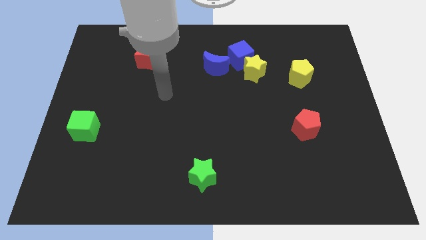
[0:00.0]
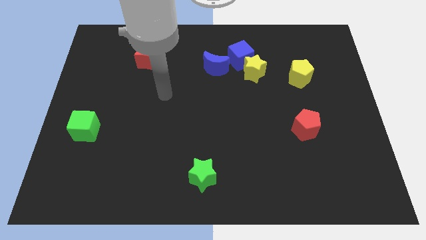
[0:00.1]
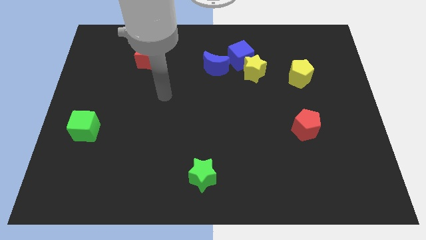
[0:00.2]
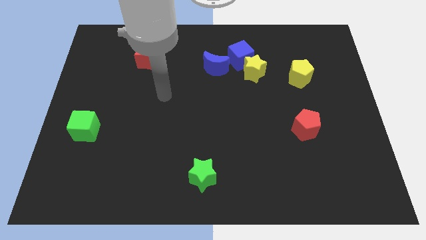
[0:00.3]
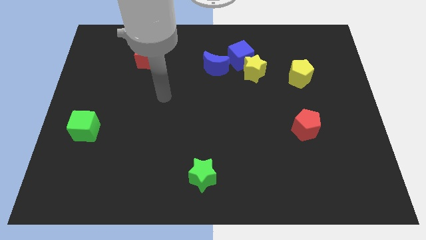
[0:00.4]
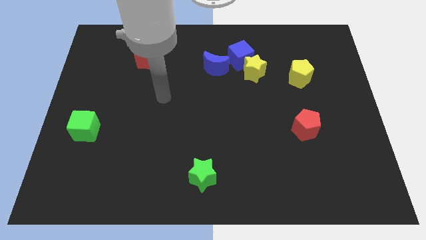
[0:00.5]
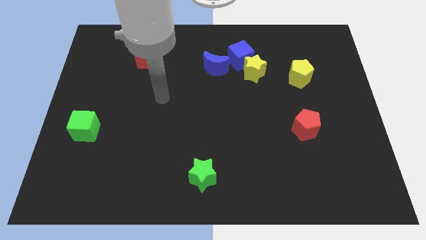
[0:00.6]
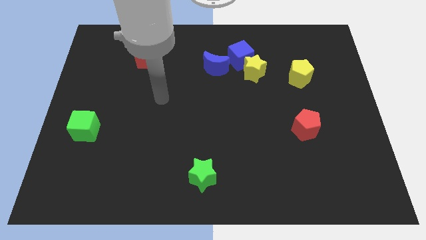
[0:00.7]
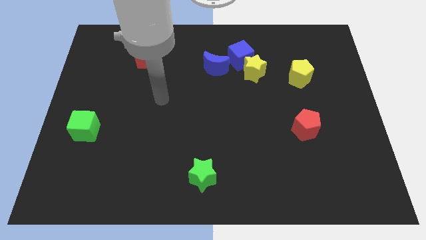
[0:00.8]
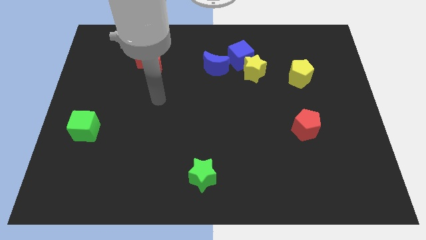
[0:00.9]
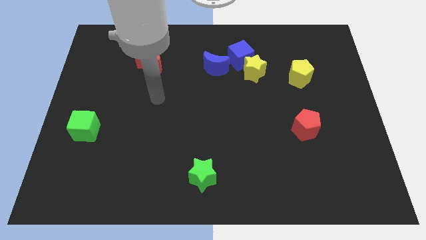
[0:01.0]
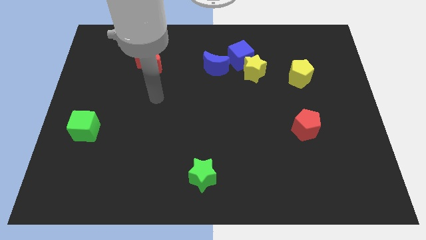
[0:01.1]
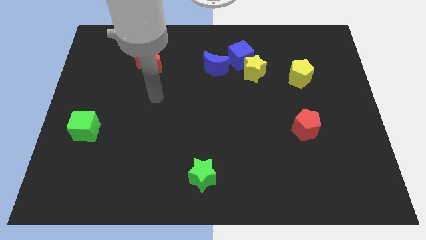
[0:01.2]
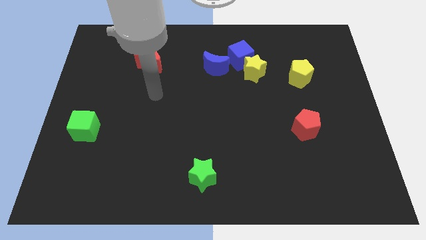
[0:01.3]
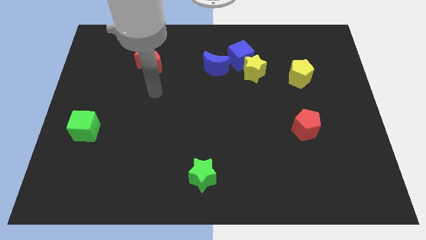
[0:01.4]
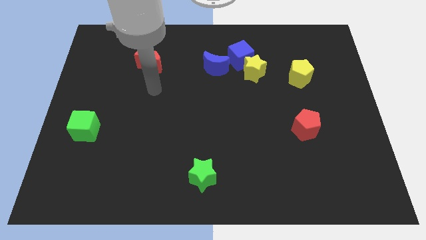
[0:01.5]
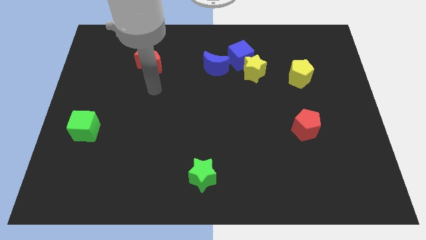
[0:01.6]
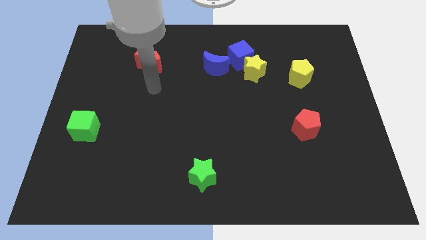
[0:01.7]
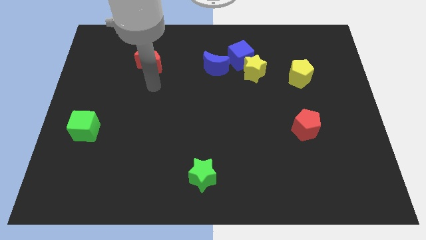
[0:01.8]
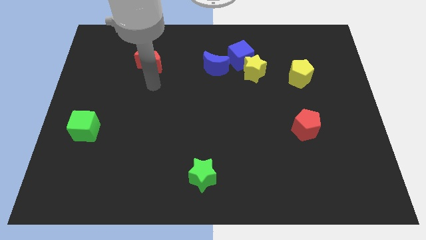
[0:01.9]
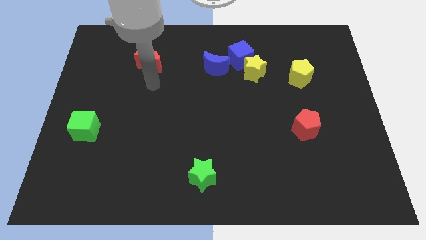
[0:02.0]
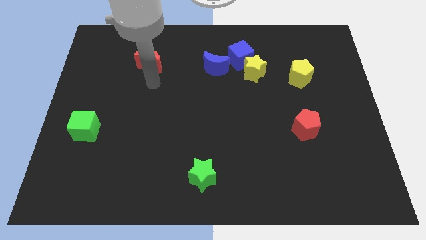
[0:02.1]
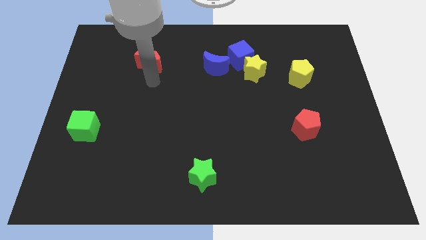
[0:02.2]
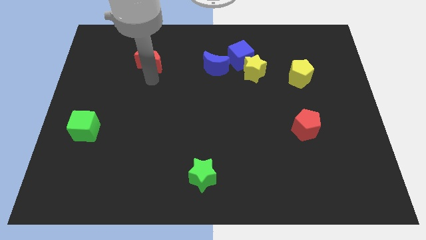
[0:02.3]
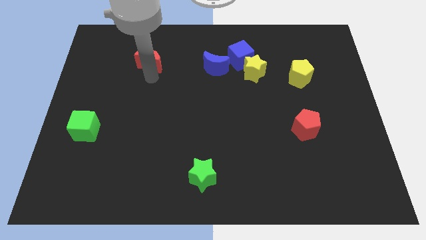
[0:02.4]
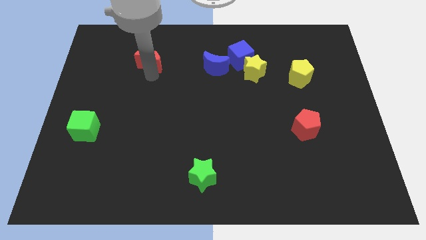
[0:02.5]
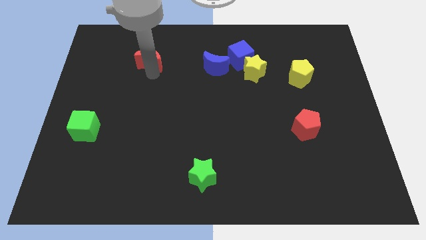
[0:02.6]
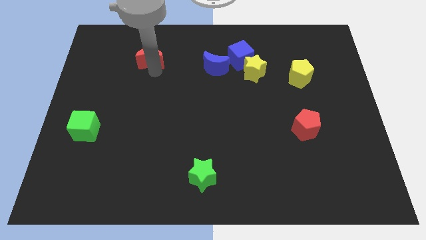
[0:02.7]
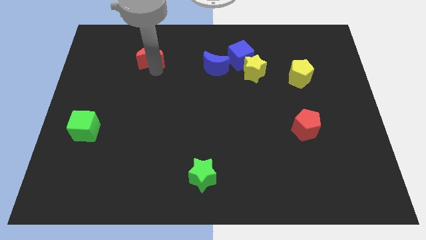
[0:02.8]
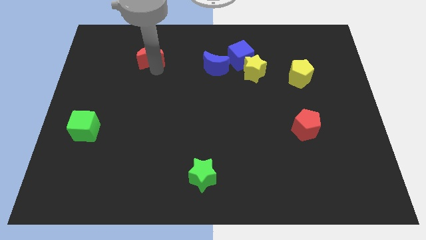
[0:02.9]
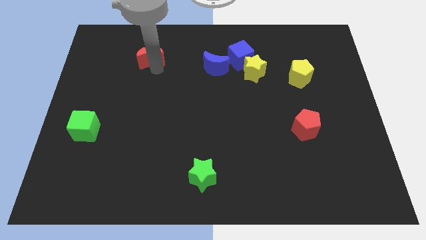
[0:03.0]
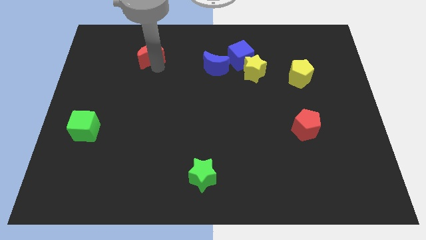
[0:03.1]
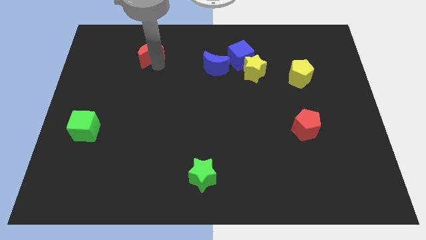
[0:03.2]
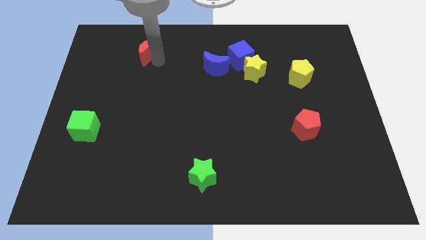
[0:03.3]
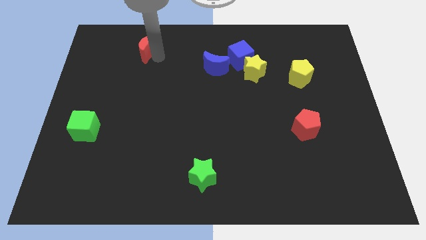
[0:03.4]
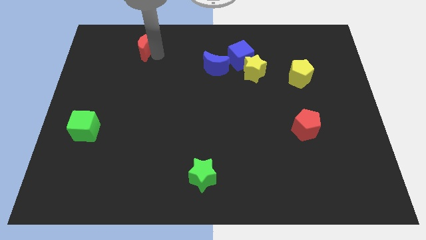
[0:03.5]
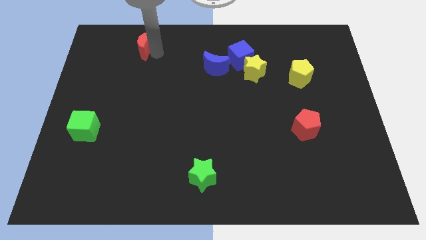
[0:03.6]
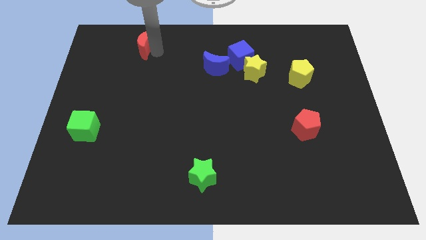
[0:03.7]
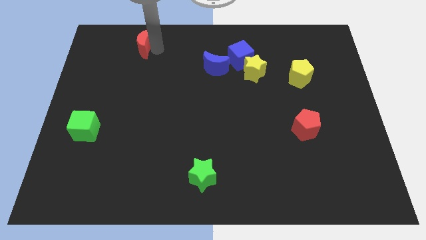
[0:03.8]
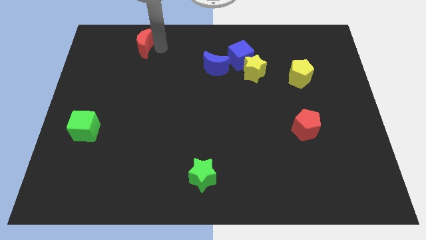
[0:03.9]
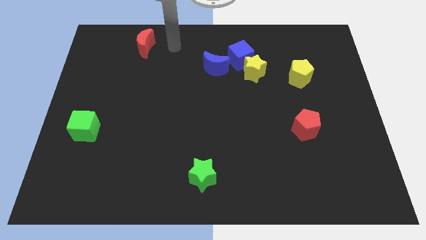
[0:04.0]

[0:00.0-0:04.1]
move red moon upwards

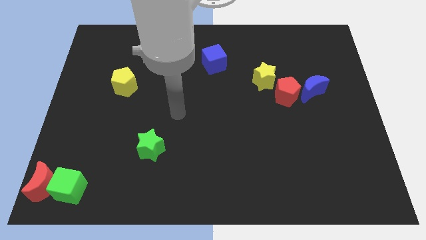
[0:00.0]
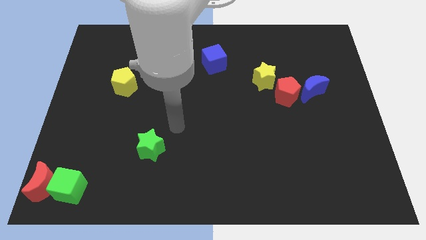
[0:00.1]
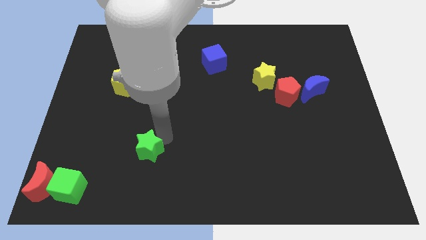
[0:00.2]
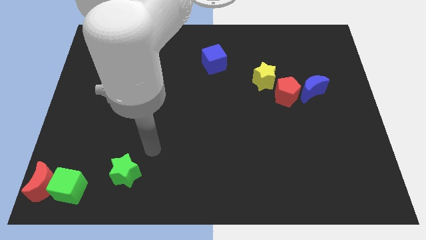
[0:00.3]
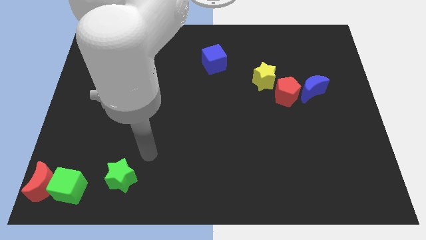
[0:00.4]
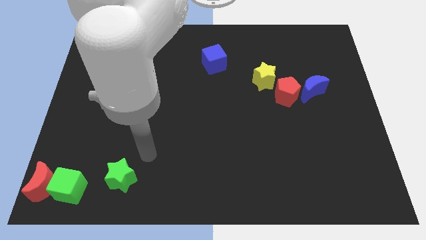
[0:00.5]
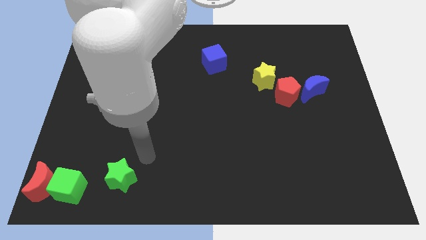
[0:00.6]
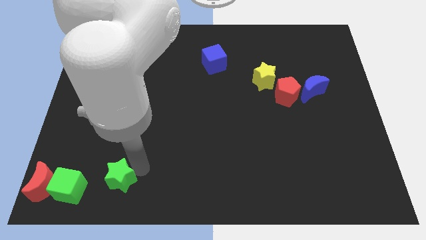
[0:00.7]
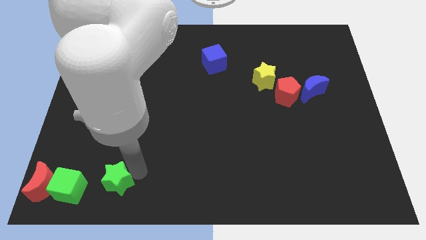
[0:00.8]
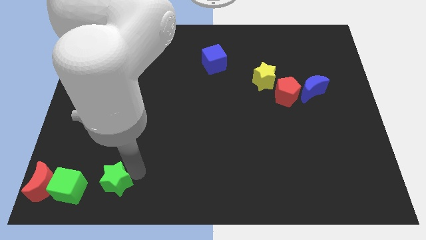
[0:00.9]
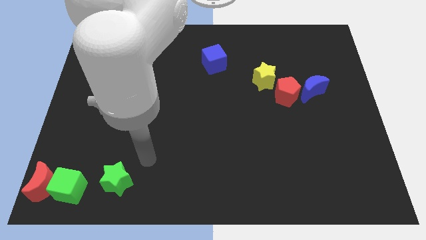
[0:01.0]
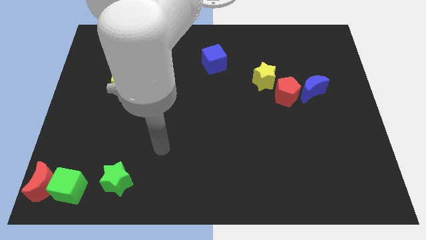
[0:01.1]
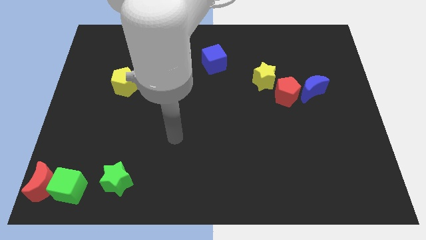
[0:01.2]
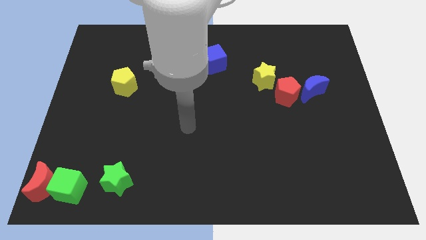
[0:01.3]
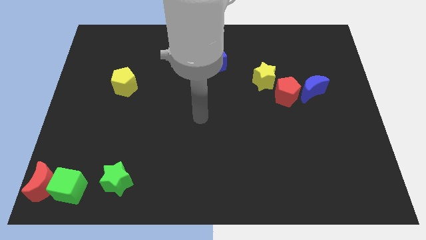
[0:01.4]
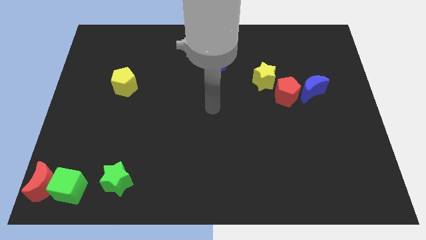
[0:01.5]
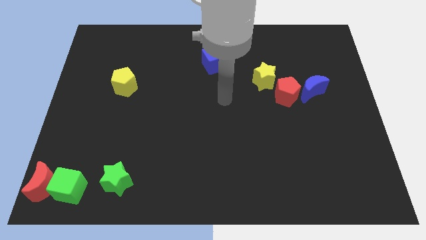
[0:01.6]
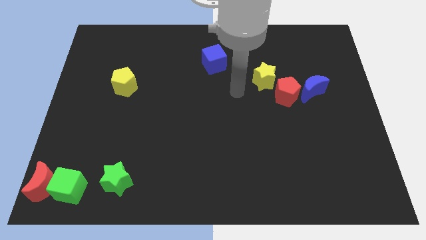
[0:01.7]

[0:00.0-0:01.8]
push the green star right to the green cube

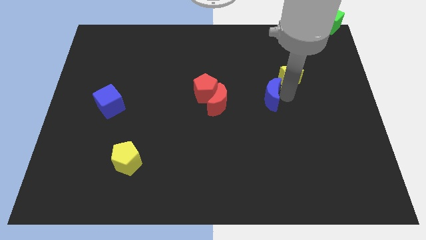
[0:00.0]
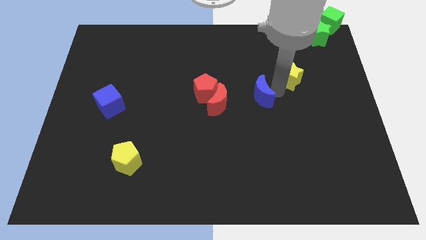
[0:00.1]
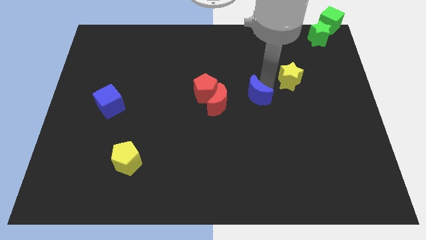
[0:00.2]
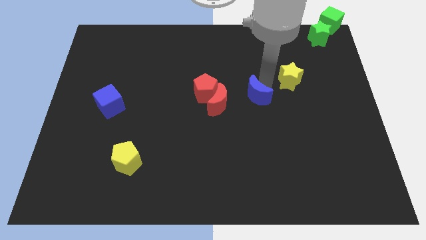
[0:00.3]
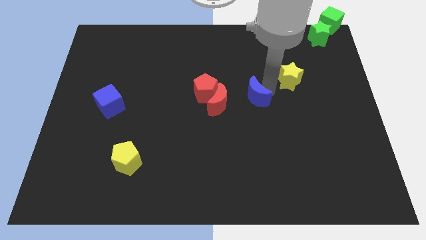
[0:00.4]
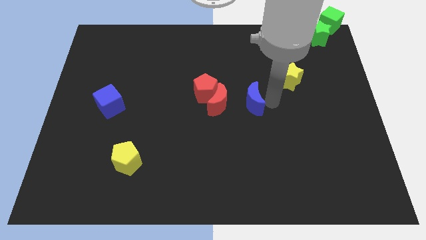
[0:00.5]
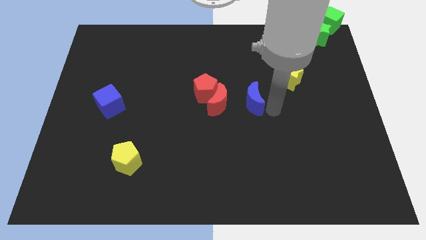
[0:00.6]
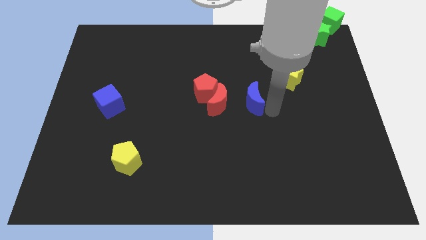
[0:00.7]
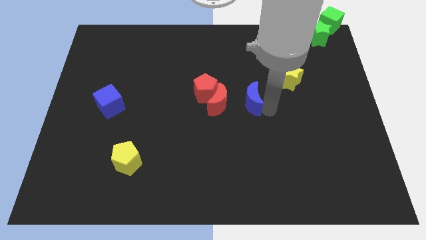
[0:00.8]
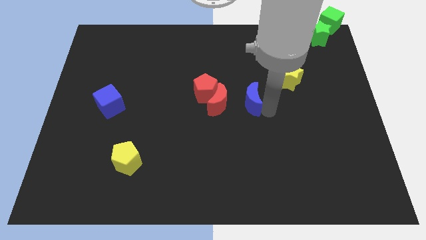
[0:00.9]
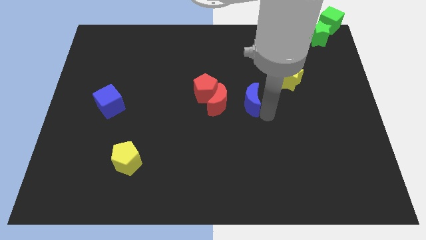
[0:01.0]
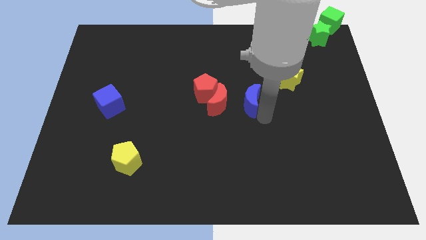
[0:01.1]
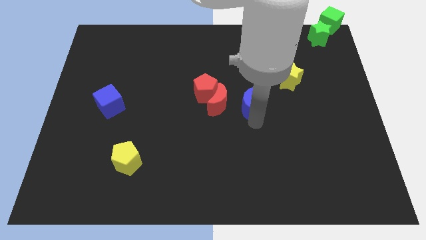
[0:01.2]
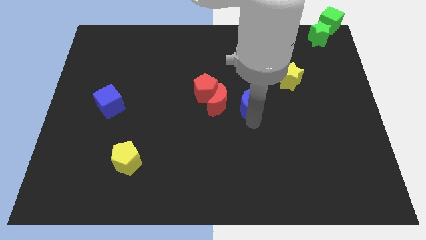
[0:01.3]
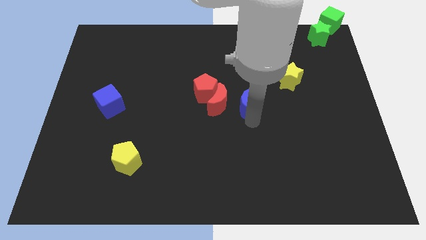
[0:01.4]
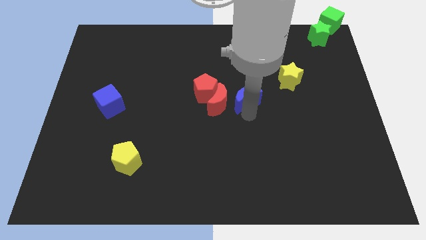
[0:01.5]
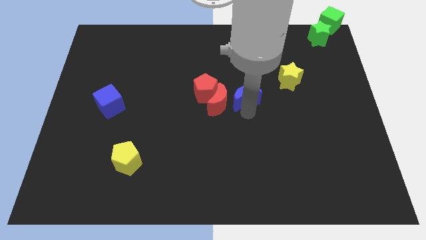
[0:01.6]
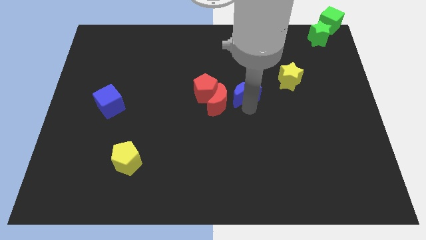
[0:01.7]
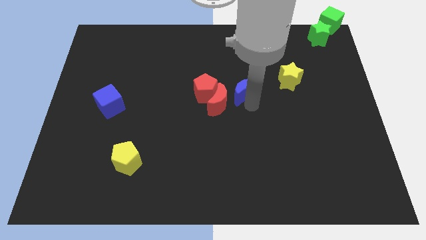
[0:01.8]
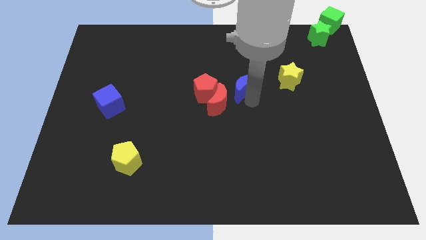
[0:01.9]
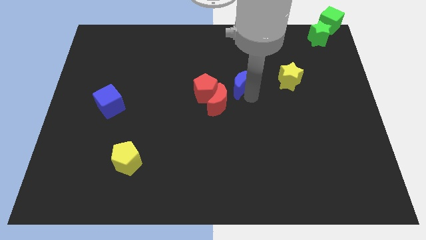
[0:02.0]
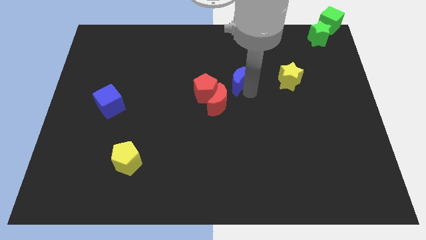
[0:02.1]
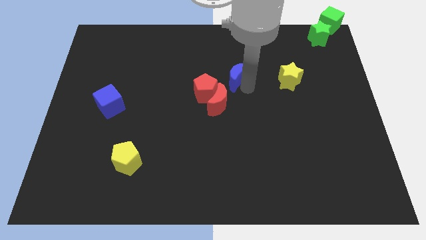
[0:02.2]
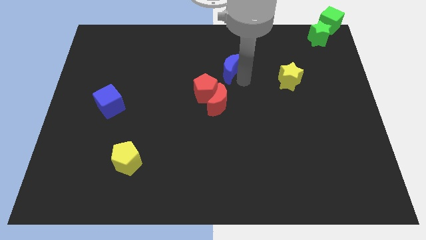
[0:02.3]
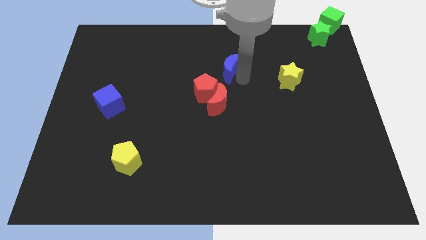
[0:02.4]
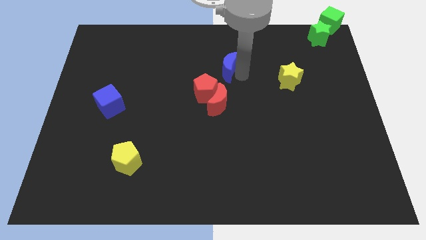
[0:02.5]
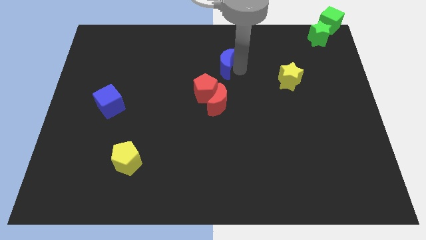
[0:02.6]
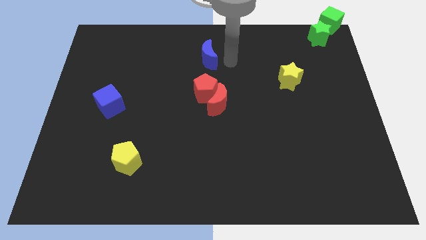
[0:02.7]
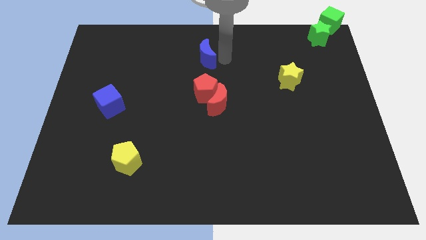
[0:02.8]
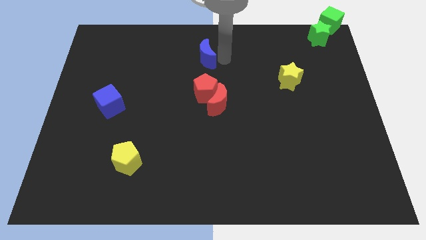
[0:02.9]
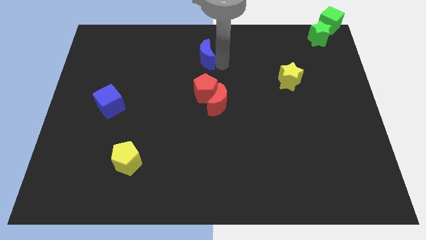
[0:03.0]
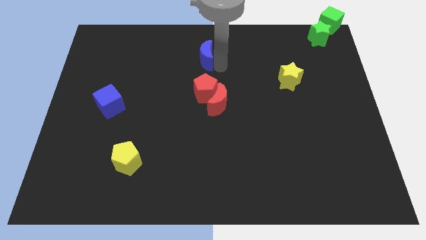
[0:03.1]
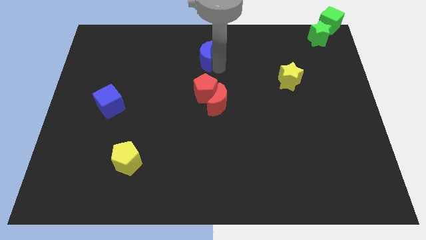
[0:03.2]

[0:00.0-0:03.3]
place blue moon to the top of red pentagon
